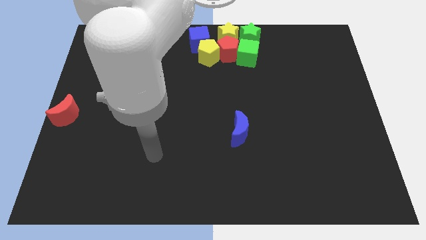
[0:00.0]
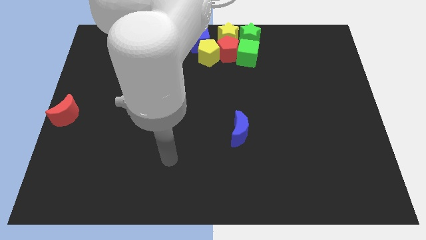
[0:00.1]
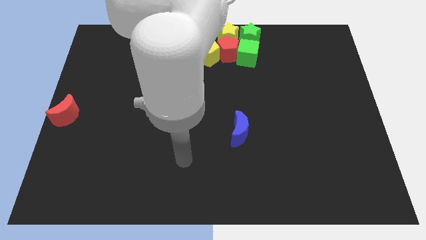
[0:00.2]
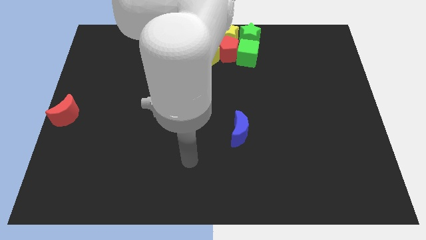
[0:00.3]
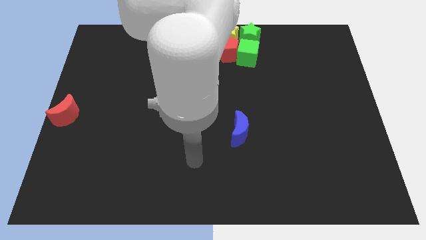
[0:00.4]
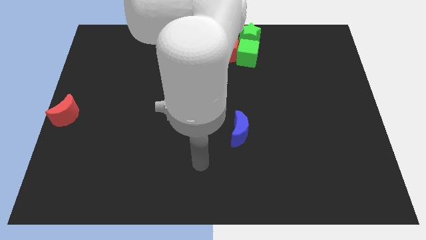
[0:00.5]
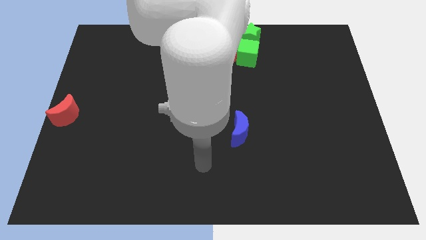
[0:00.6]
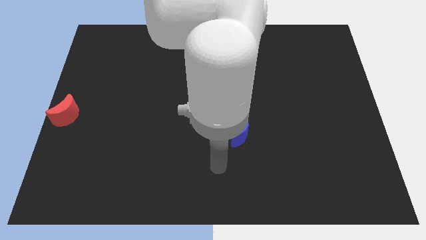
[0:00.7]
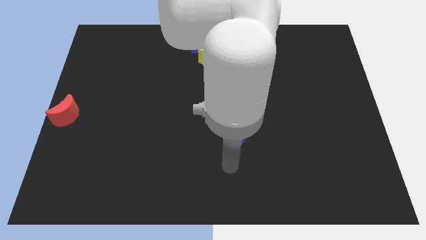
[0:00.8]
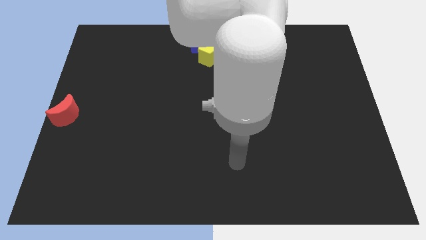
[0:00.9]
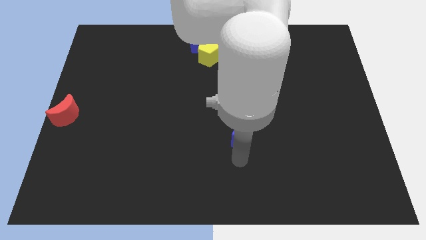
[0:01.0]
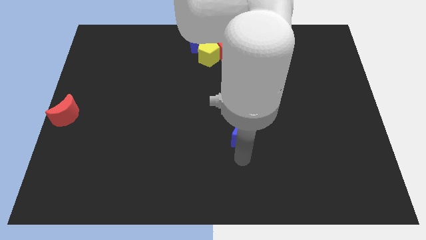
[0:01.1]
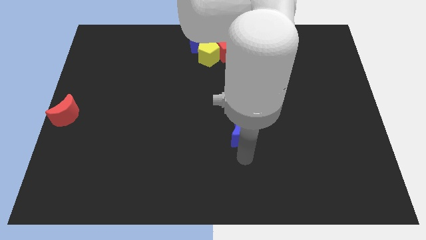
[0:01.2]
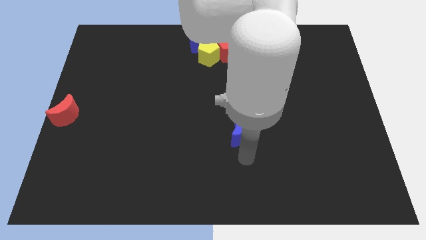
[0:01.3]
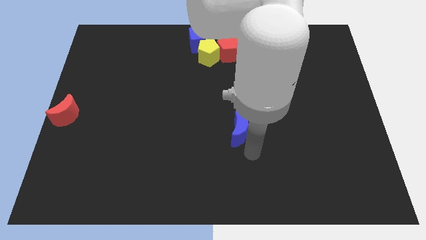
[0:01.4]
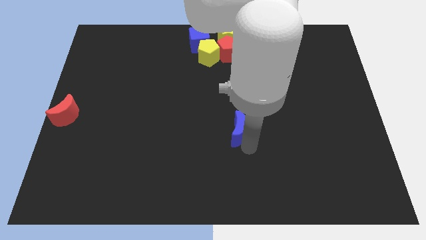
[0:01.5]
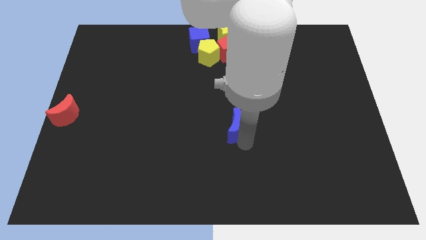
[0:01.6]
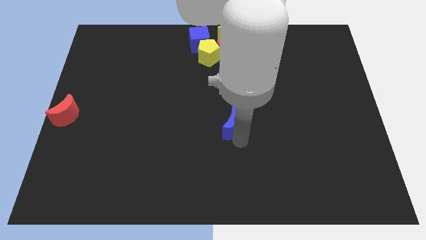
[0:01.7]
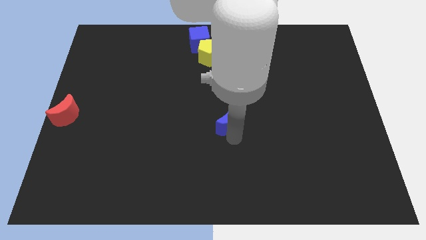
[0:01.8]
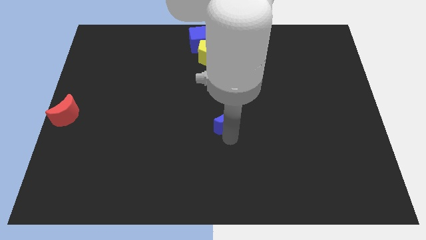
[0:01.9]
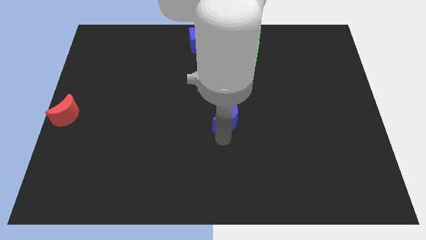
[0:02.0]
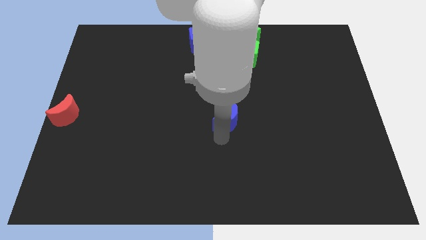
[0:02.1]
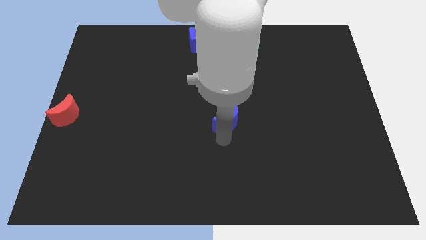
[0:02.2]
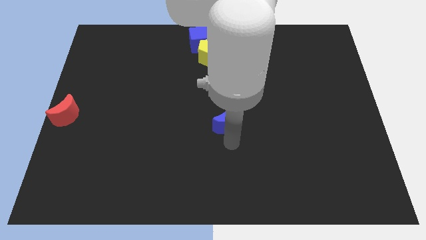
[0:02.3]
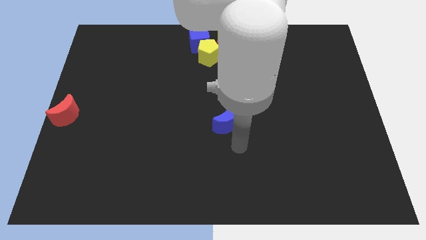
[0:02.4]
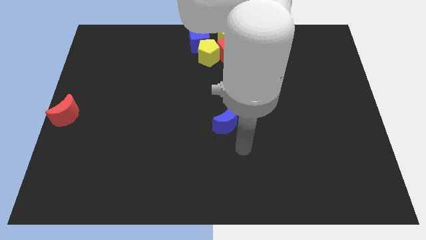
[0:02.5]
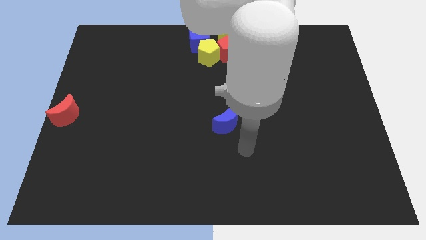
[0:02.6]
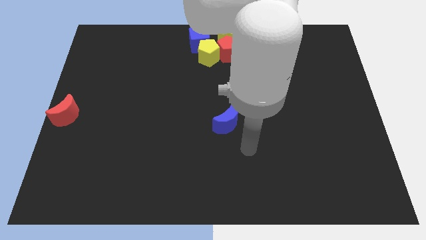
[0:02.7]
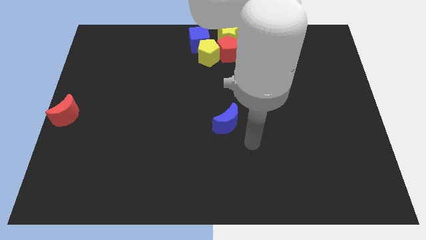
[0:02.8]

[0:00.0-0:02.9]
move the blue moon to the center of the board

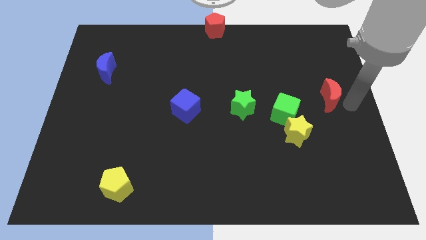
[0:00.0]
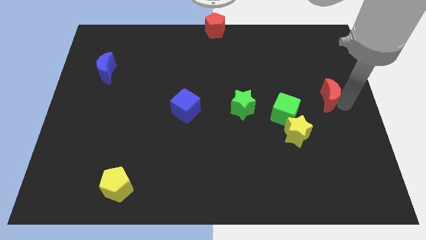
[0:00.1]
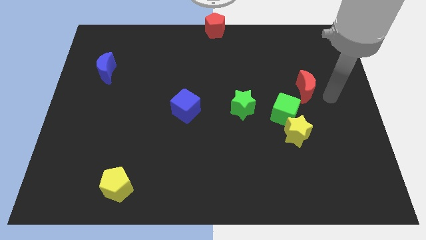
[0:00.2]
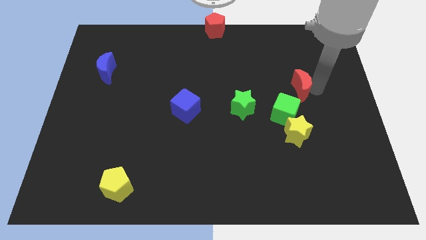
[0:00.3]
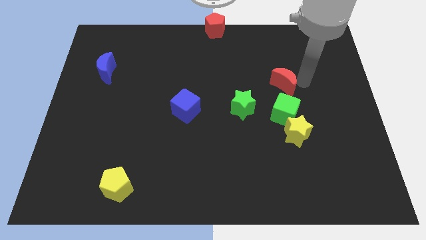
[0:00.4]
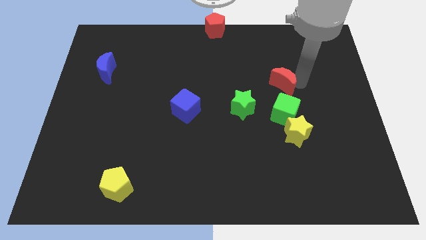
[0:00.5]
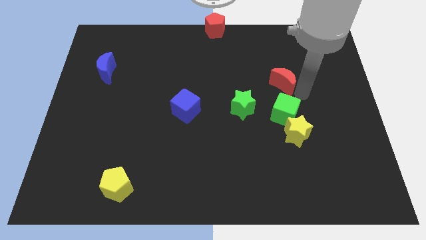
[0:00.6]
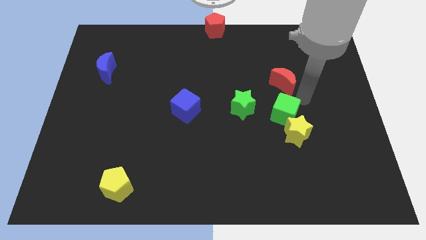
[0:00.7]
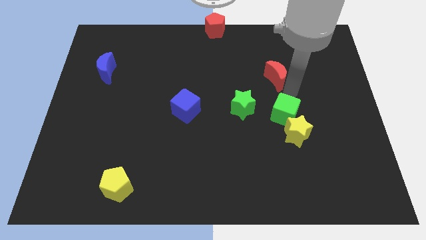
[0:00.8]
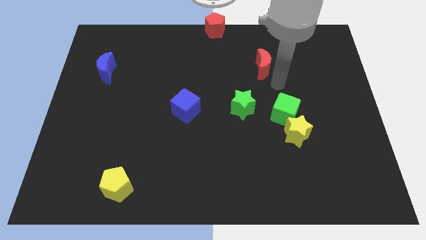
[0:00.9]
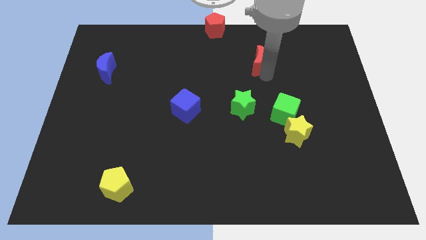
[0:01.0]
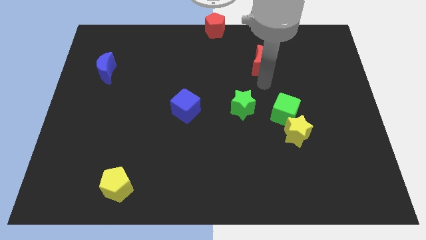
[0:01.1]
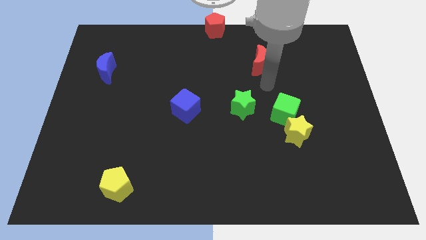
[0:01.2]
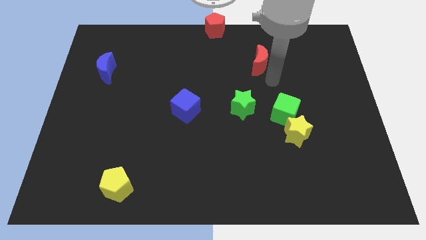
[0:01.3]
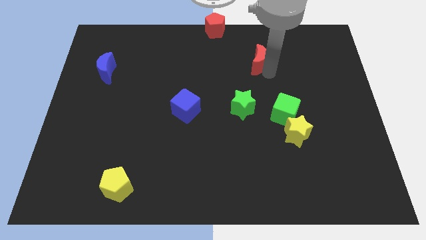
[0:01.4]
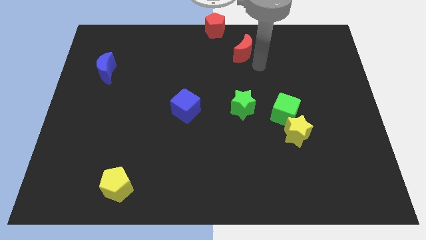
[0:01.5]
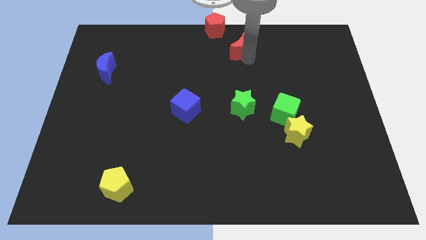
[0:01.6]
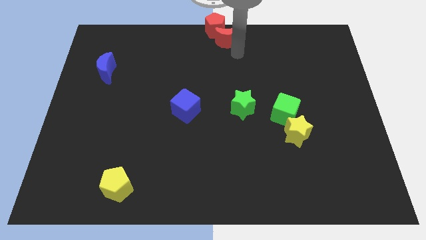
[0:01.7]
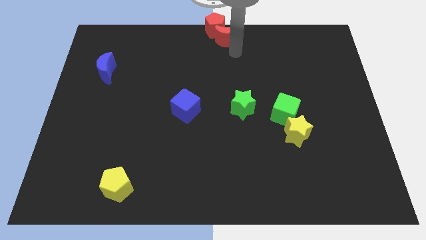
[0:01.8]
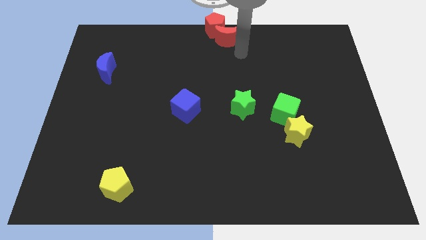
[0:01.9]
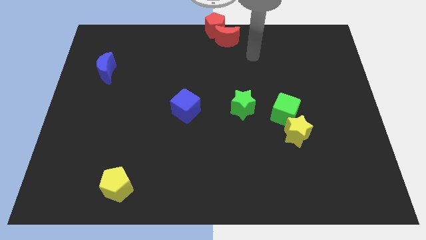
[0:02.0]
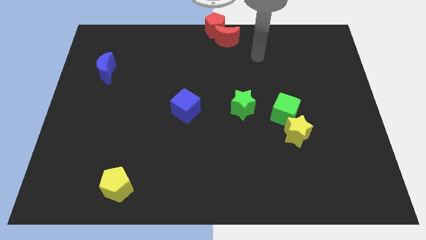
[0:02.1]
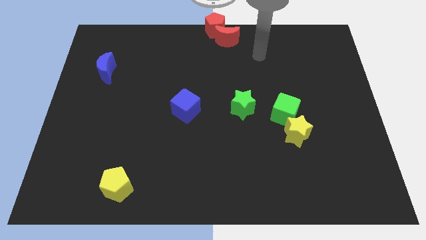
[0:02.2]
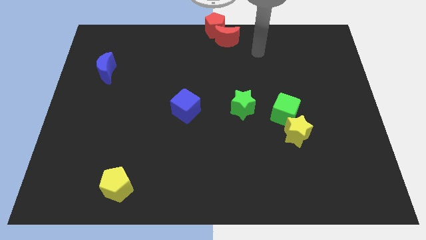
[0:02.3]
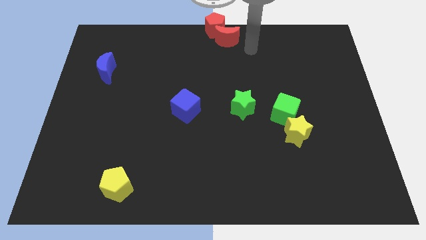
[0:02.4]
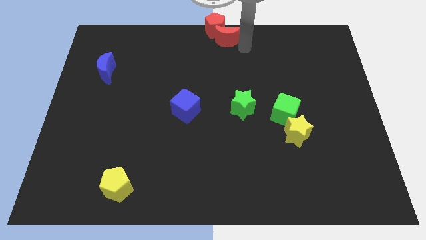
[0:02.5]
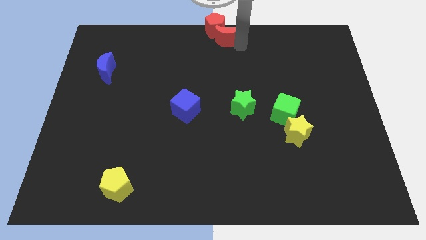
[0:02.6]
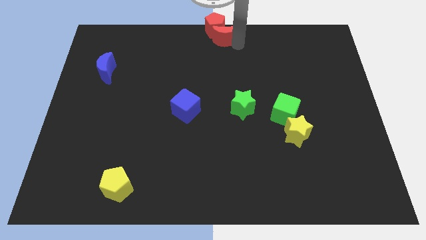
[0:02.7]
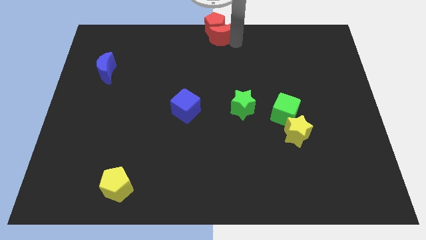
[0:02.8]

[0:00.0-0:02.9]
push the red moon towards the top center of the board

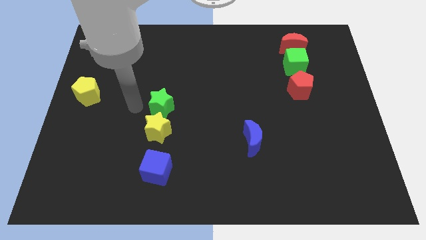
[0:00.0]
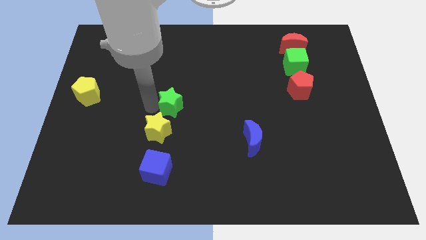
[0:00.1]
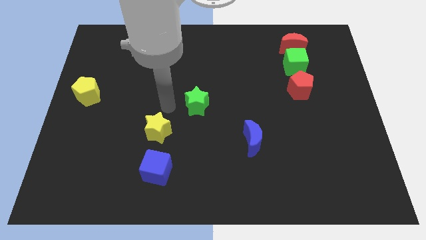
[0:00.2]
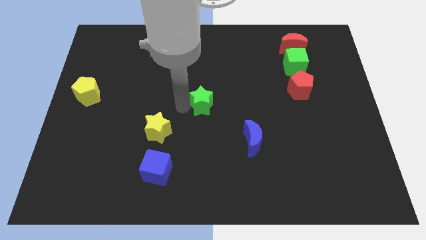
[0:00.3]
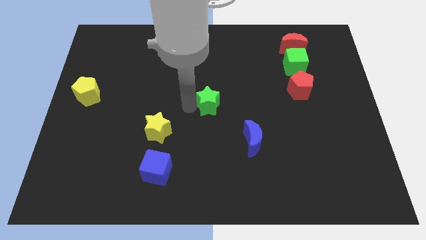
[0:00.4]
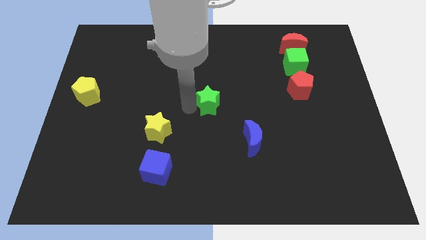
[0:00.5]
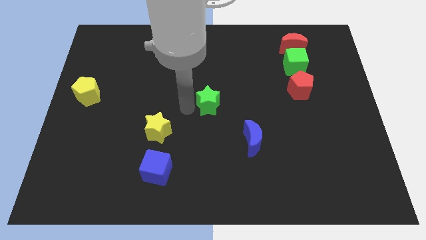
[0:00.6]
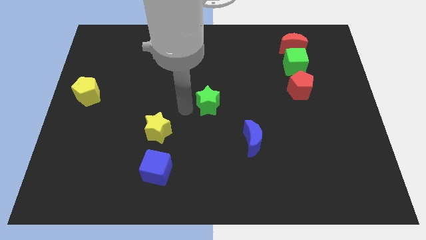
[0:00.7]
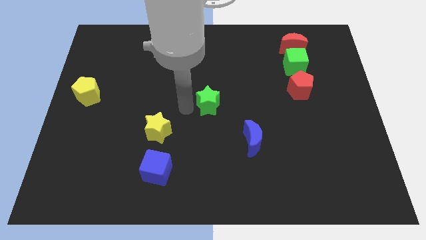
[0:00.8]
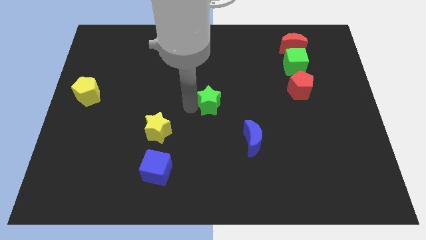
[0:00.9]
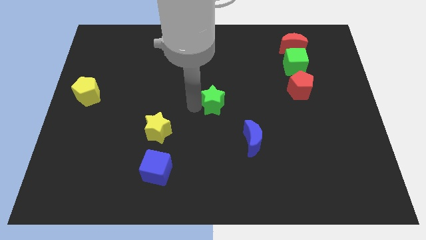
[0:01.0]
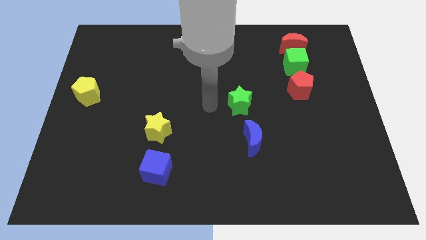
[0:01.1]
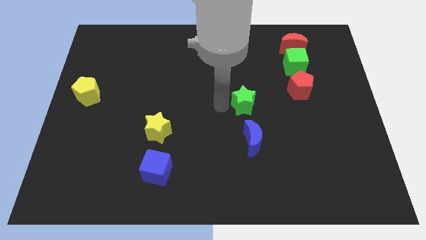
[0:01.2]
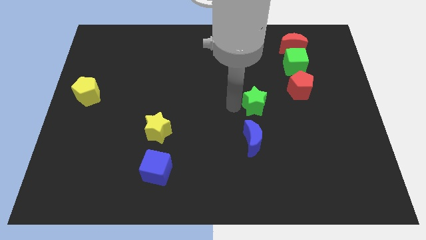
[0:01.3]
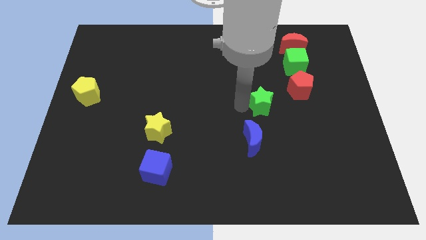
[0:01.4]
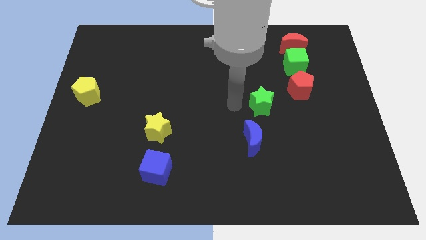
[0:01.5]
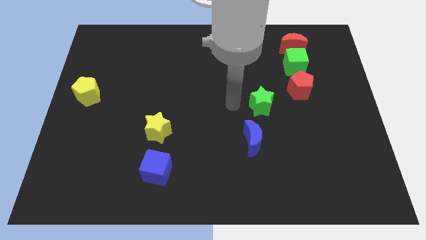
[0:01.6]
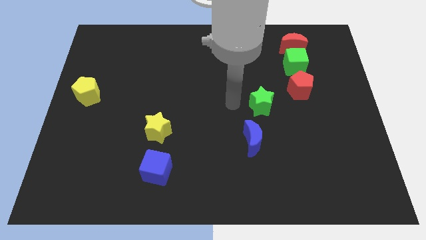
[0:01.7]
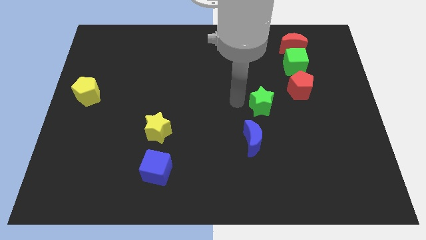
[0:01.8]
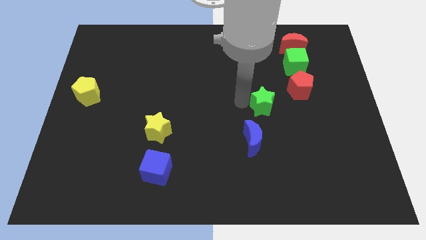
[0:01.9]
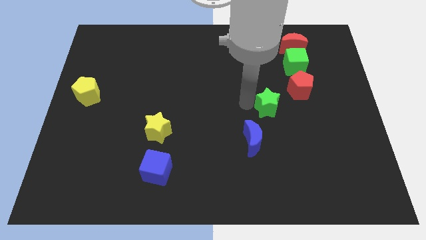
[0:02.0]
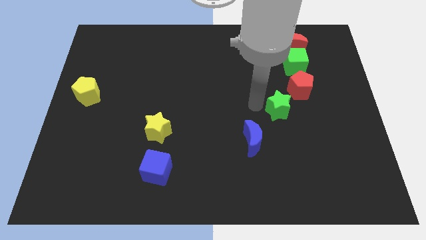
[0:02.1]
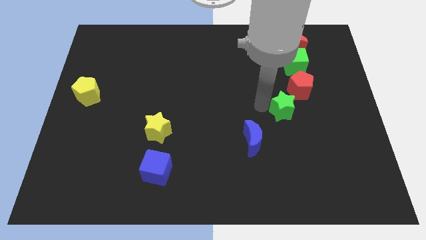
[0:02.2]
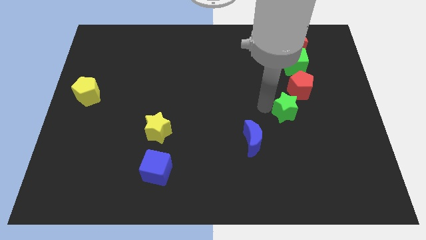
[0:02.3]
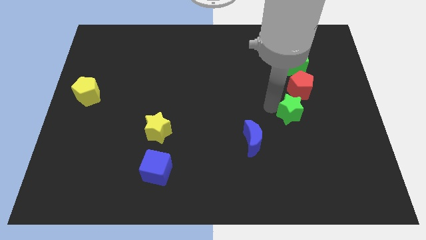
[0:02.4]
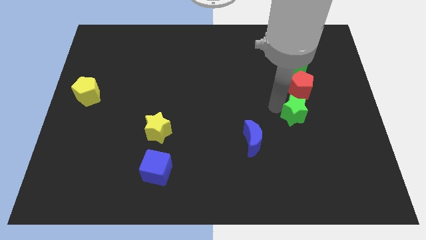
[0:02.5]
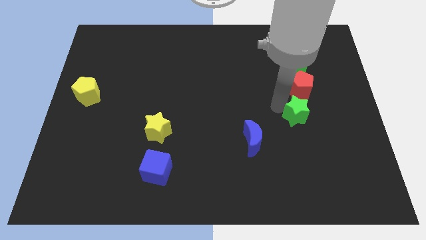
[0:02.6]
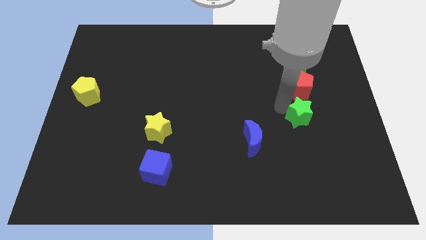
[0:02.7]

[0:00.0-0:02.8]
push the green star to the bottom of the red pentagon

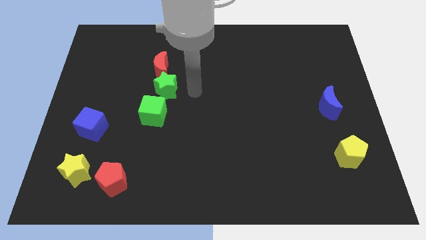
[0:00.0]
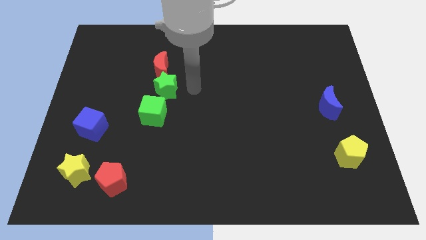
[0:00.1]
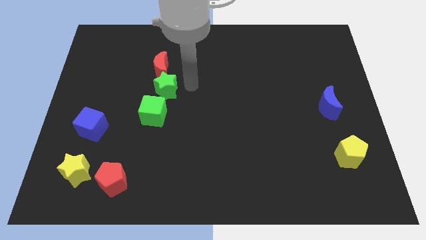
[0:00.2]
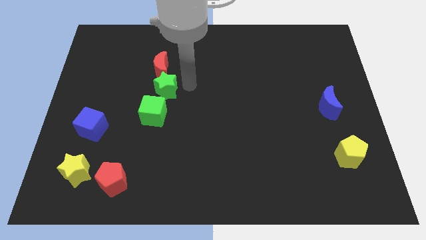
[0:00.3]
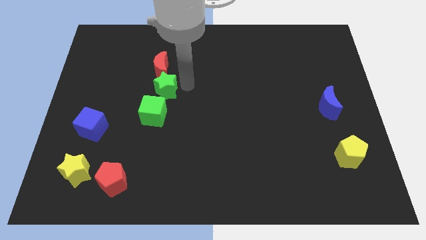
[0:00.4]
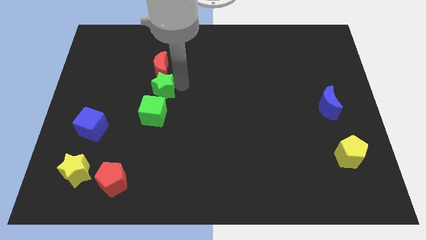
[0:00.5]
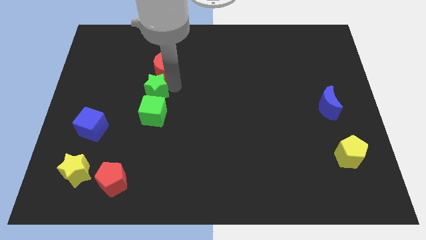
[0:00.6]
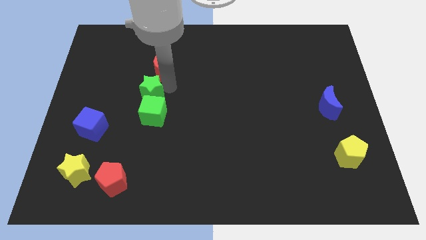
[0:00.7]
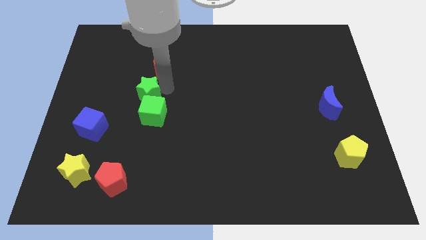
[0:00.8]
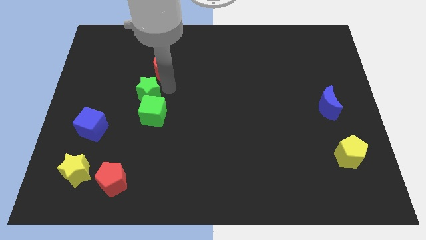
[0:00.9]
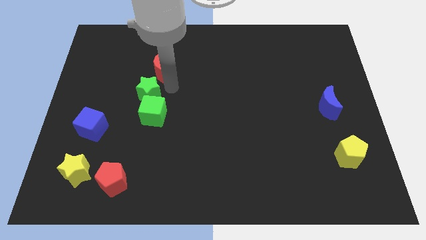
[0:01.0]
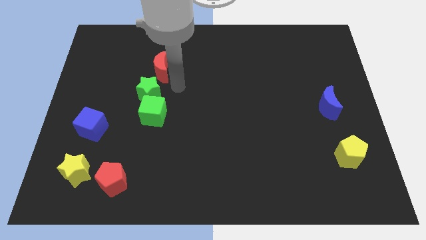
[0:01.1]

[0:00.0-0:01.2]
move green star slightly to the left
